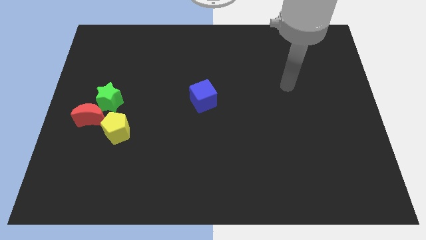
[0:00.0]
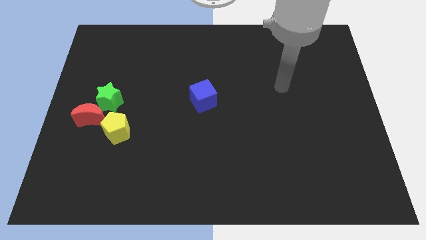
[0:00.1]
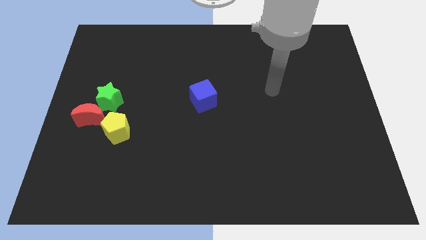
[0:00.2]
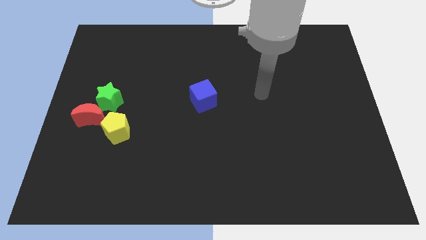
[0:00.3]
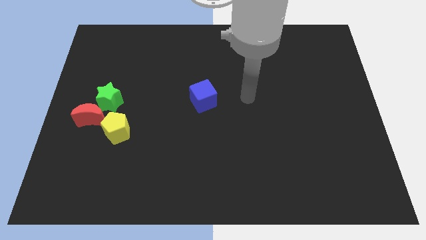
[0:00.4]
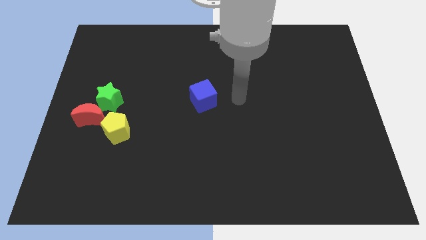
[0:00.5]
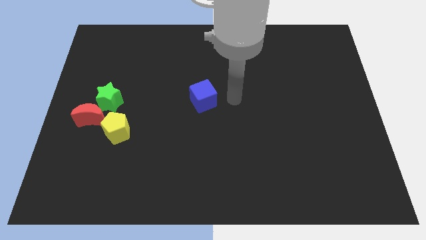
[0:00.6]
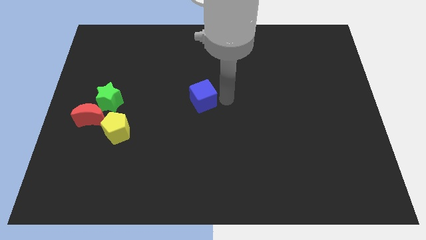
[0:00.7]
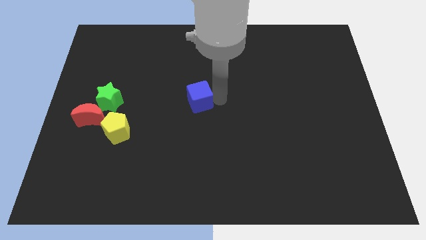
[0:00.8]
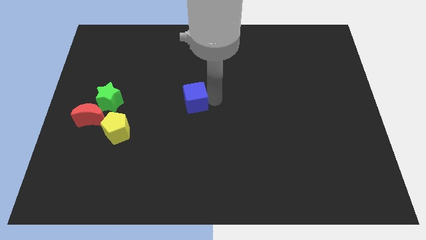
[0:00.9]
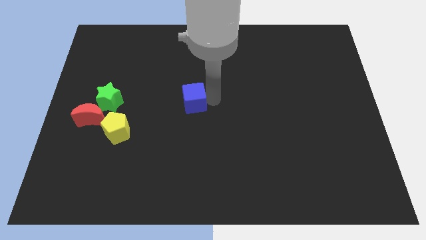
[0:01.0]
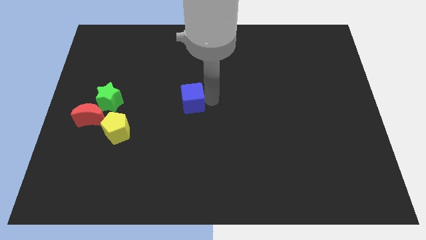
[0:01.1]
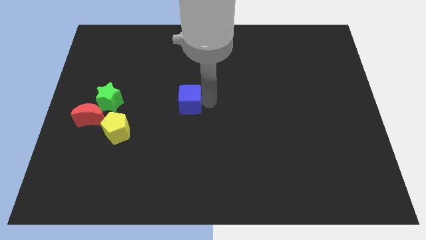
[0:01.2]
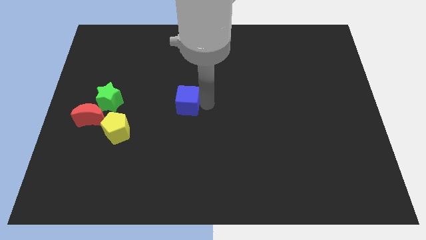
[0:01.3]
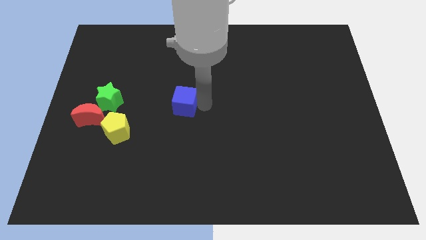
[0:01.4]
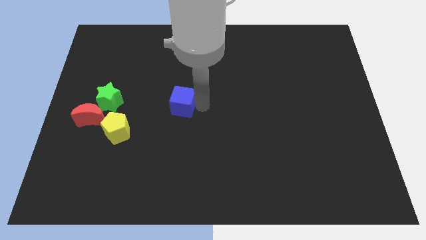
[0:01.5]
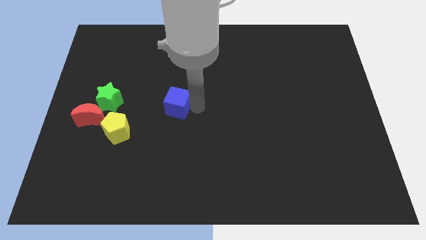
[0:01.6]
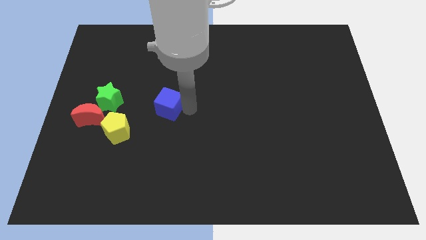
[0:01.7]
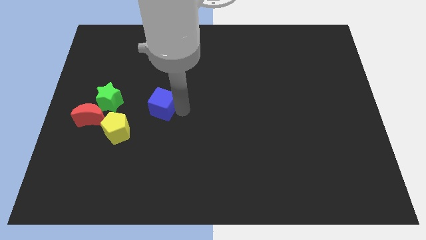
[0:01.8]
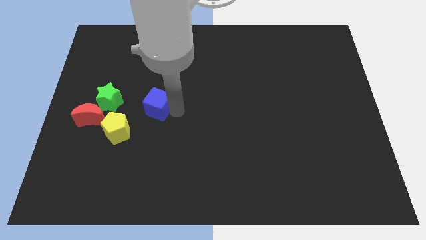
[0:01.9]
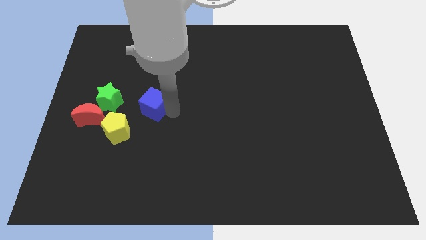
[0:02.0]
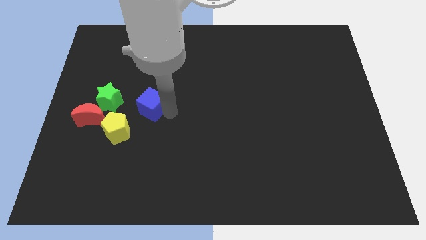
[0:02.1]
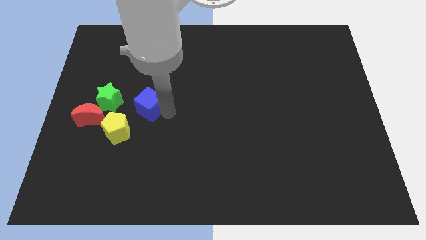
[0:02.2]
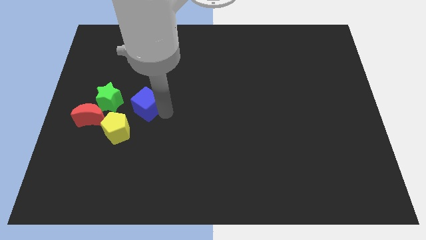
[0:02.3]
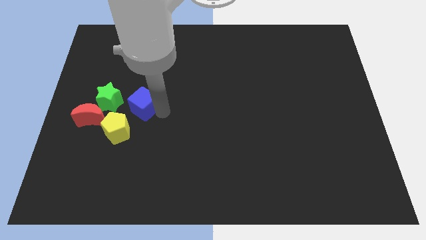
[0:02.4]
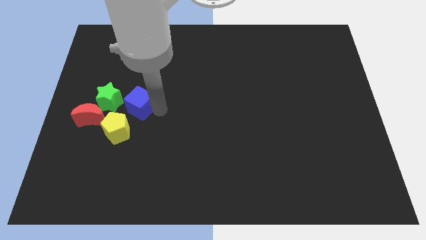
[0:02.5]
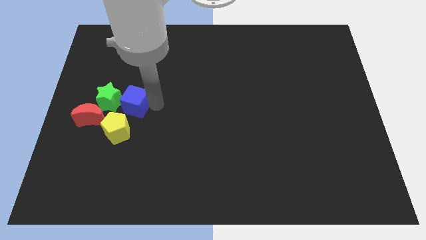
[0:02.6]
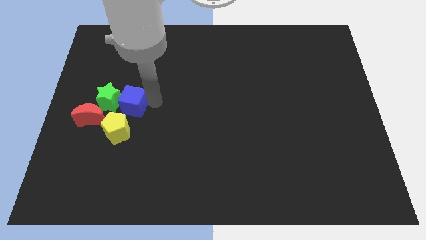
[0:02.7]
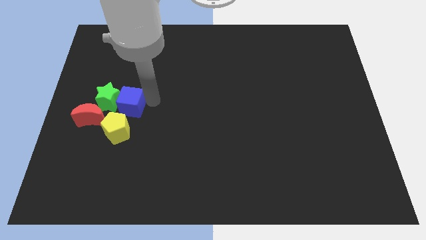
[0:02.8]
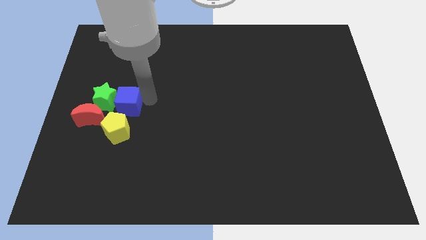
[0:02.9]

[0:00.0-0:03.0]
slide the cube towards the star

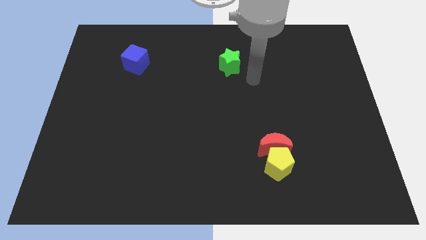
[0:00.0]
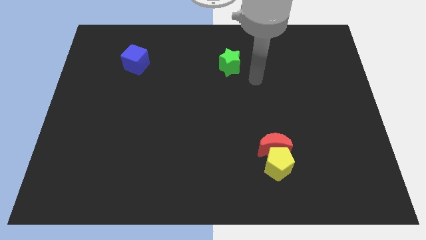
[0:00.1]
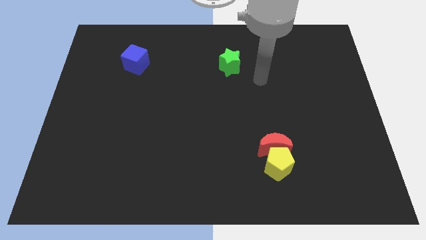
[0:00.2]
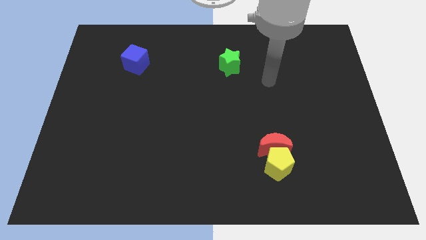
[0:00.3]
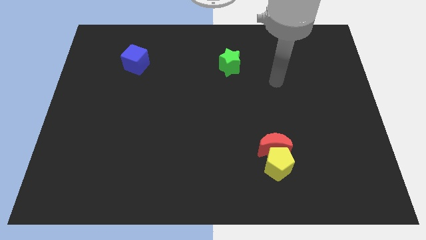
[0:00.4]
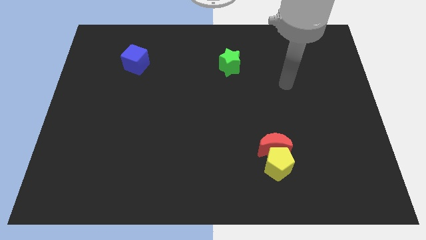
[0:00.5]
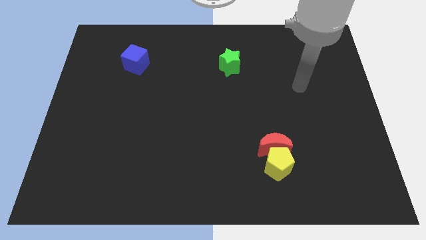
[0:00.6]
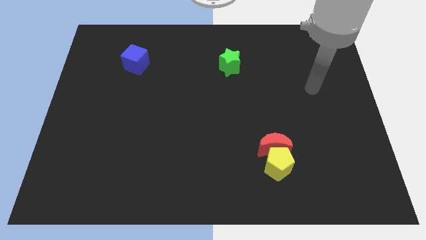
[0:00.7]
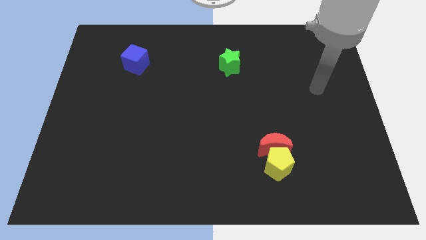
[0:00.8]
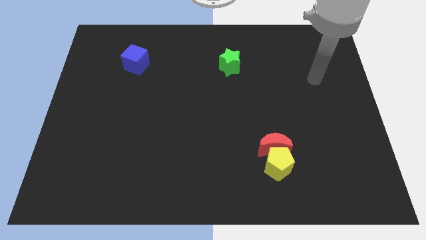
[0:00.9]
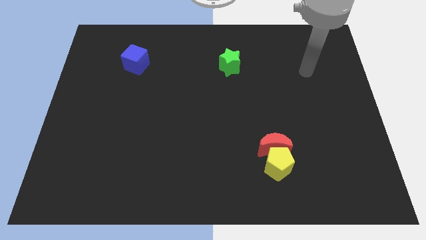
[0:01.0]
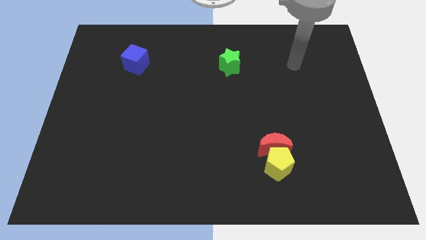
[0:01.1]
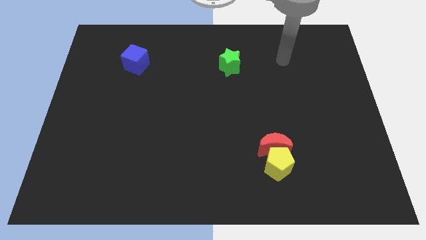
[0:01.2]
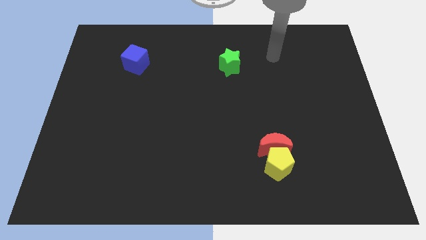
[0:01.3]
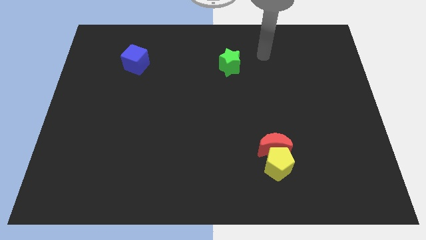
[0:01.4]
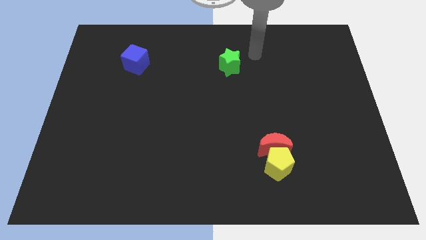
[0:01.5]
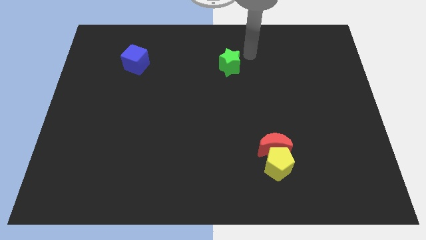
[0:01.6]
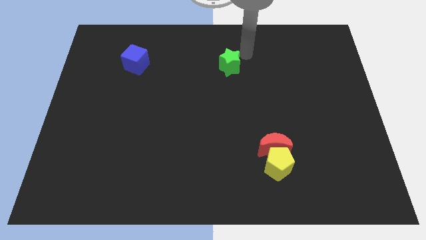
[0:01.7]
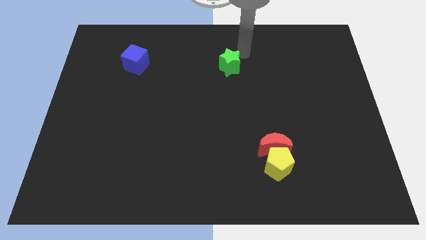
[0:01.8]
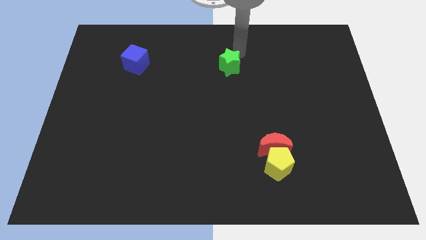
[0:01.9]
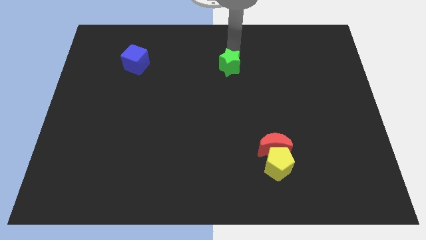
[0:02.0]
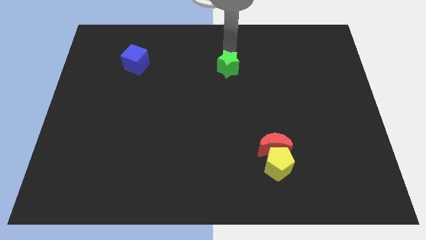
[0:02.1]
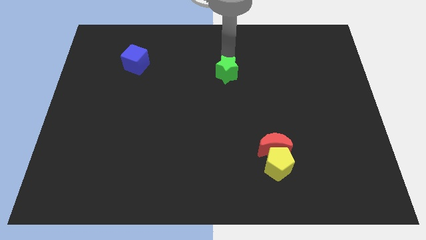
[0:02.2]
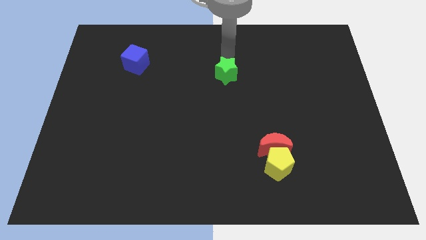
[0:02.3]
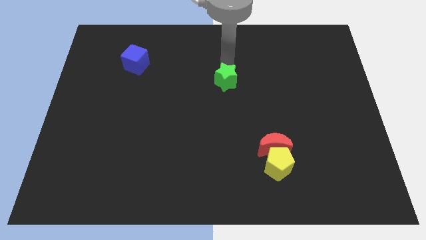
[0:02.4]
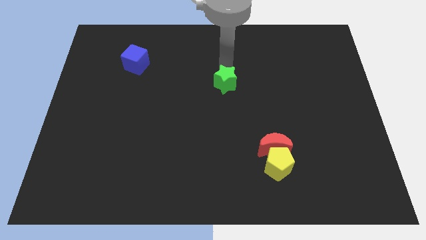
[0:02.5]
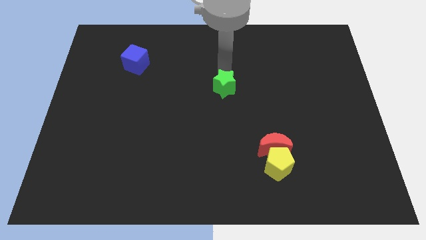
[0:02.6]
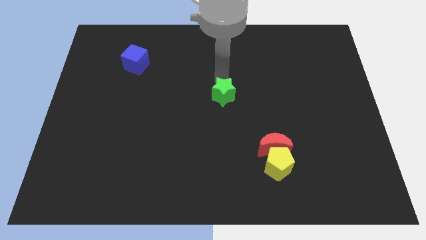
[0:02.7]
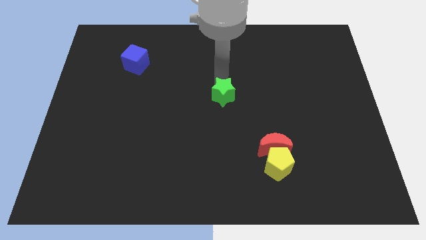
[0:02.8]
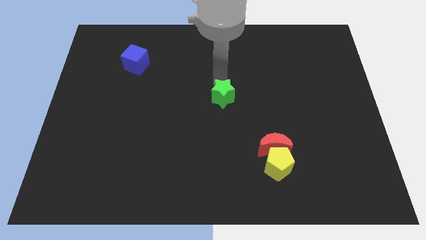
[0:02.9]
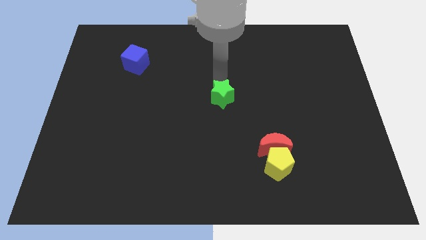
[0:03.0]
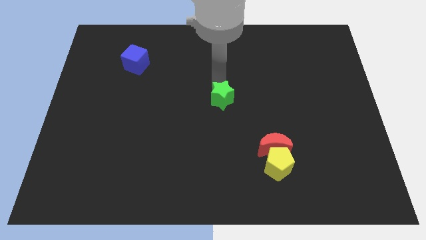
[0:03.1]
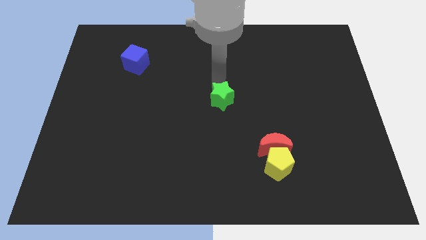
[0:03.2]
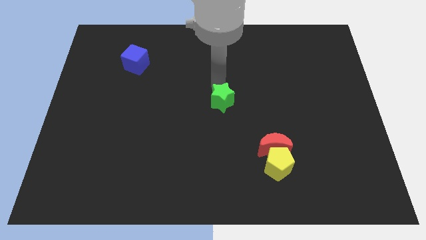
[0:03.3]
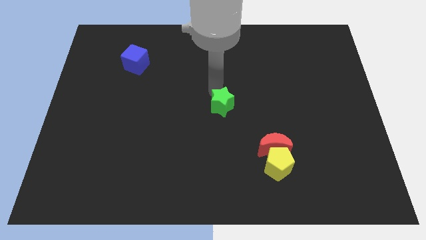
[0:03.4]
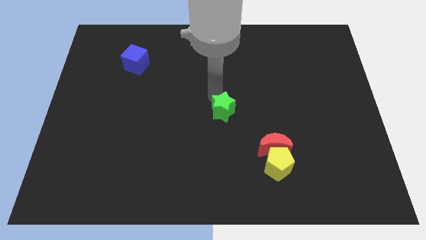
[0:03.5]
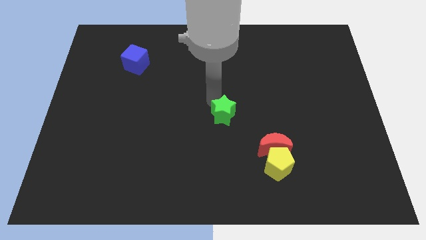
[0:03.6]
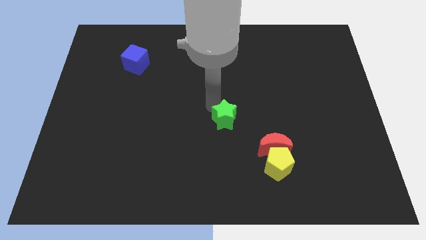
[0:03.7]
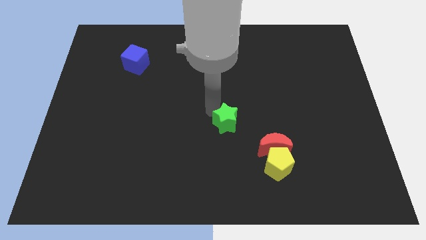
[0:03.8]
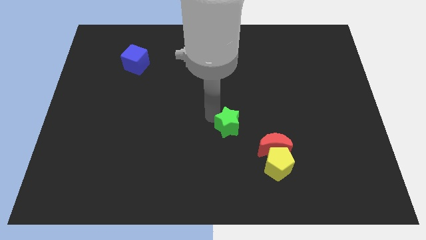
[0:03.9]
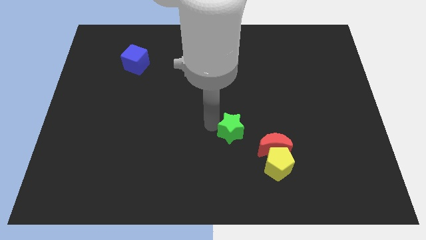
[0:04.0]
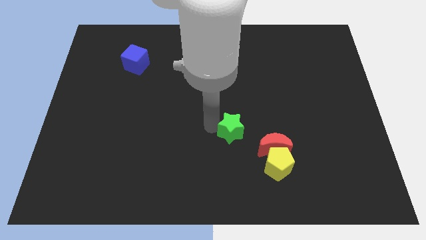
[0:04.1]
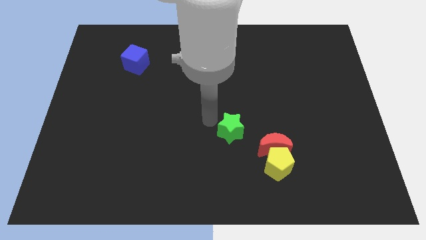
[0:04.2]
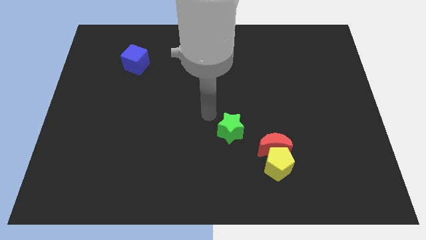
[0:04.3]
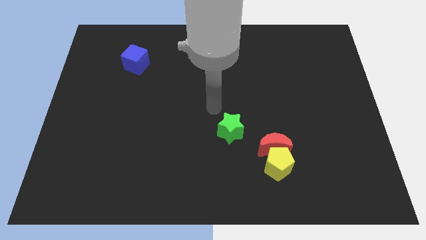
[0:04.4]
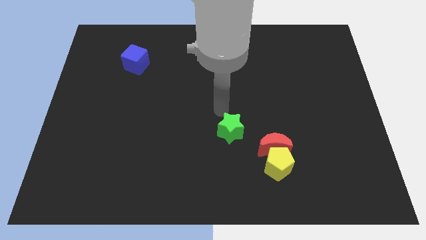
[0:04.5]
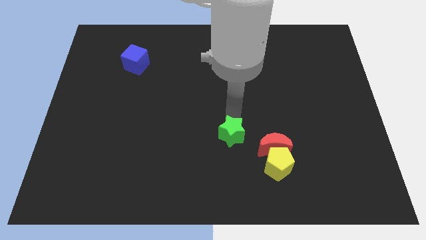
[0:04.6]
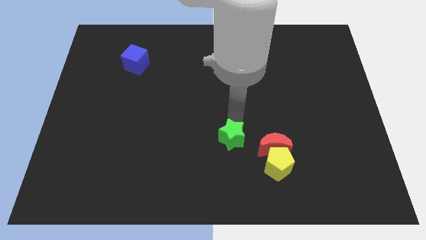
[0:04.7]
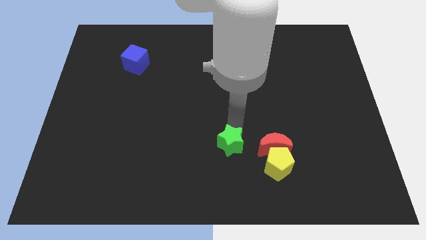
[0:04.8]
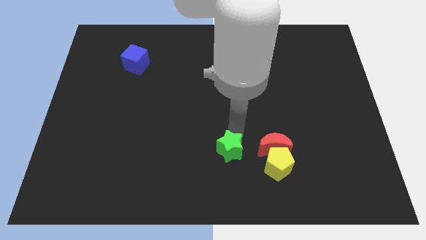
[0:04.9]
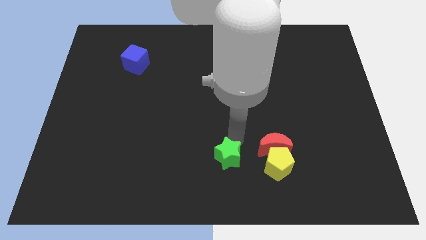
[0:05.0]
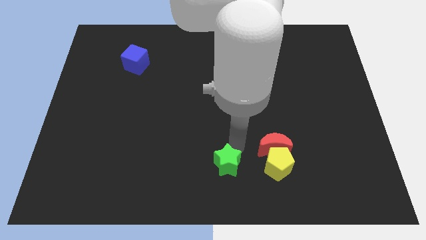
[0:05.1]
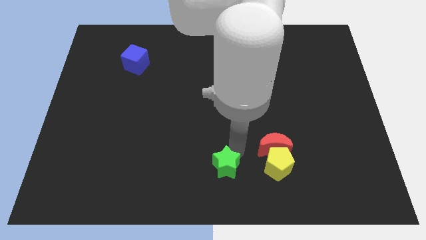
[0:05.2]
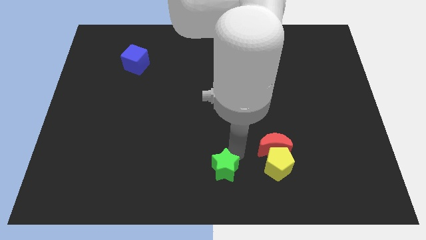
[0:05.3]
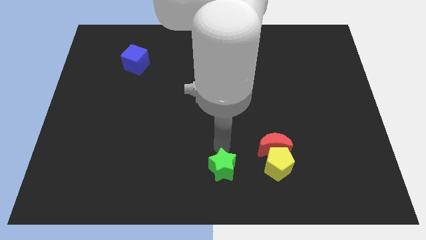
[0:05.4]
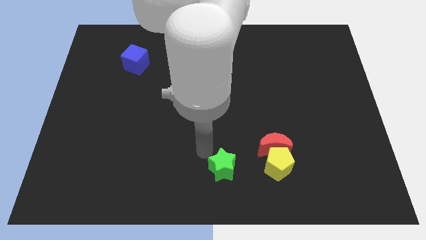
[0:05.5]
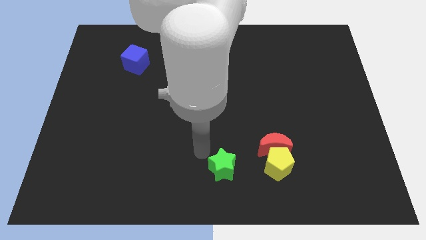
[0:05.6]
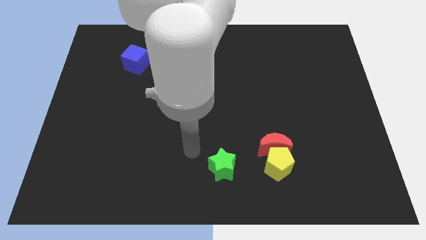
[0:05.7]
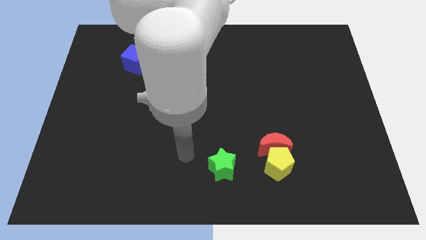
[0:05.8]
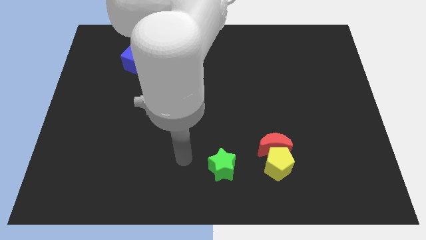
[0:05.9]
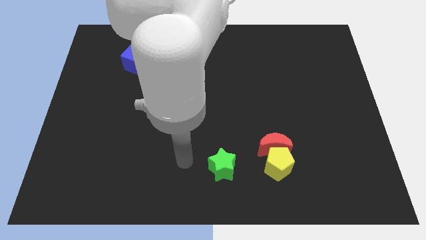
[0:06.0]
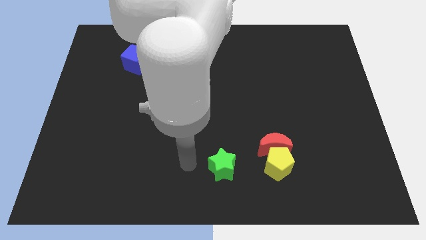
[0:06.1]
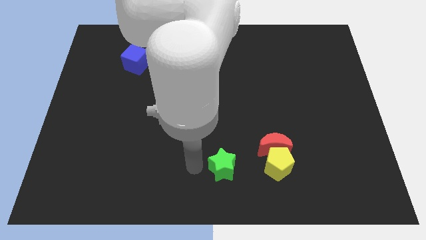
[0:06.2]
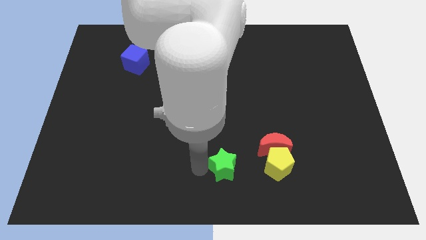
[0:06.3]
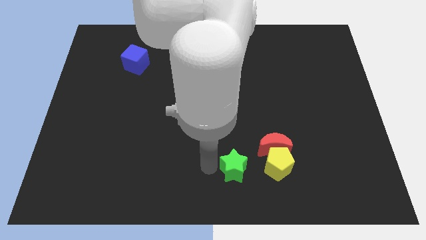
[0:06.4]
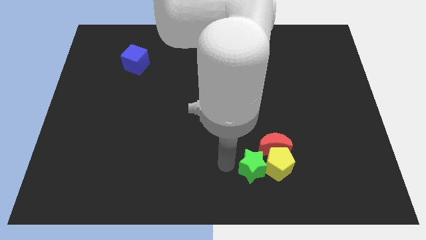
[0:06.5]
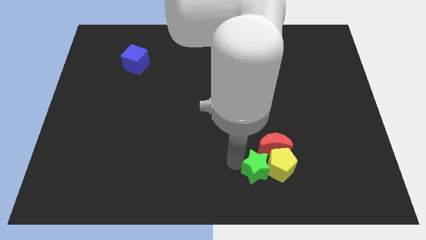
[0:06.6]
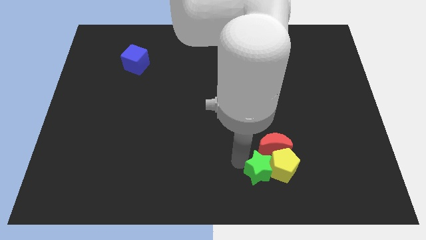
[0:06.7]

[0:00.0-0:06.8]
put the star to the yellow block
